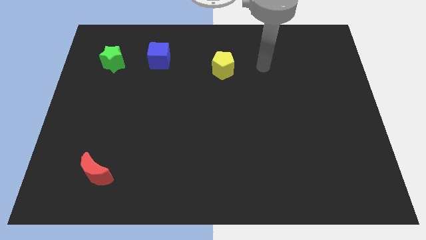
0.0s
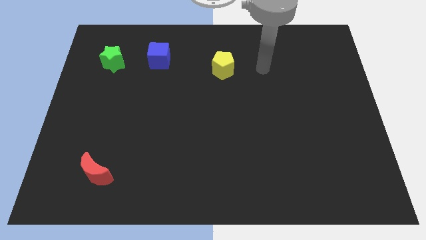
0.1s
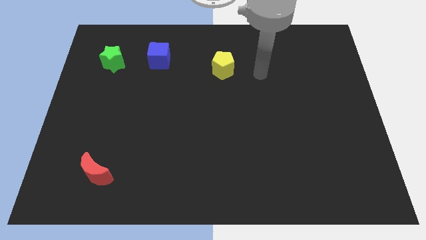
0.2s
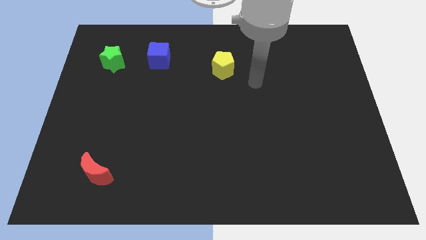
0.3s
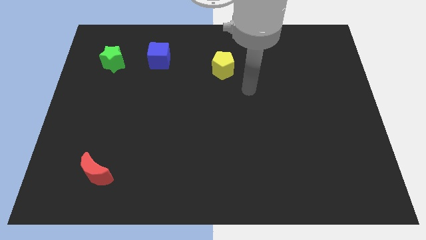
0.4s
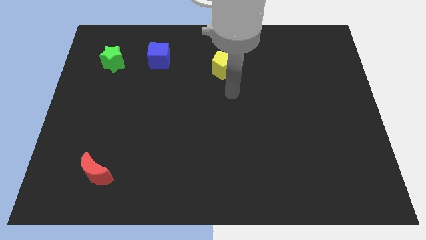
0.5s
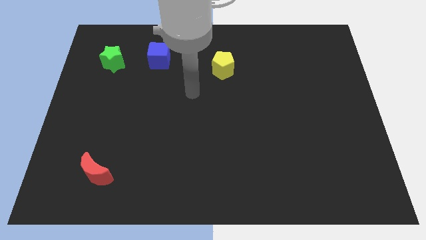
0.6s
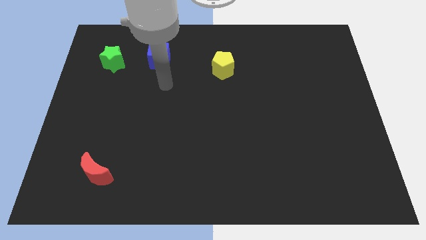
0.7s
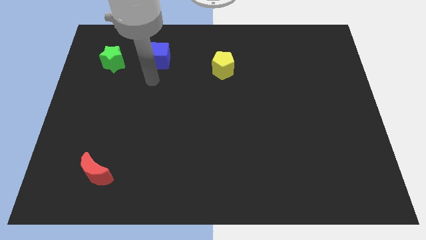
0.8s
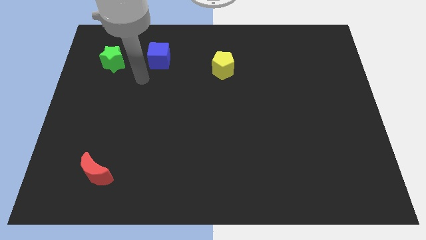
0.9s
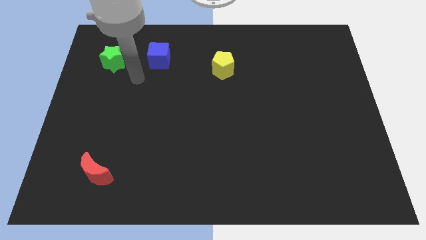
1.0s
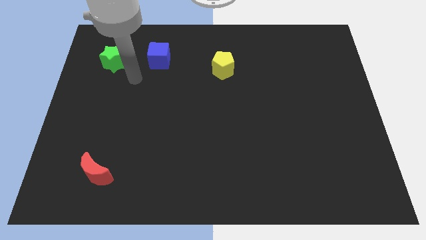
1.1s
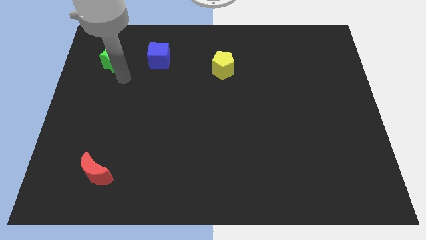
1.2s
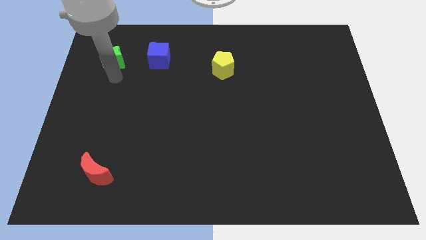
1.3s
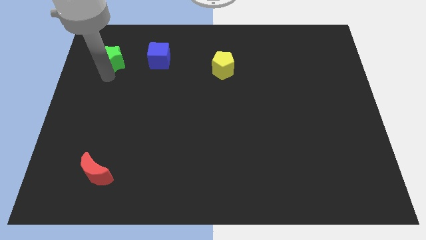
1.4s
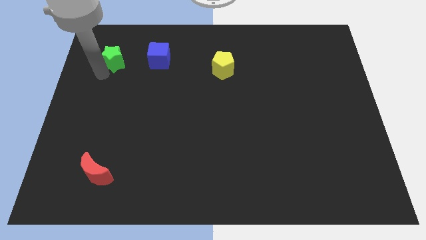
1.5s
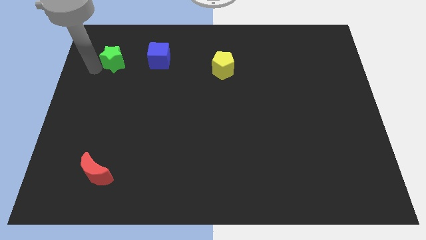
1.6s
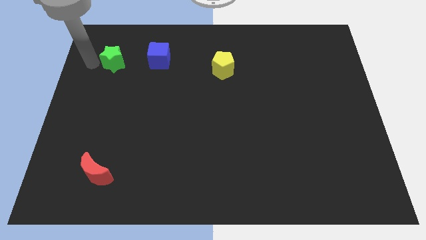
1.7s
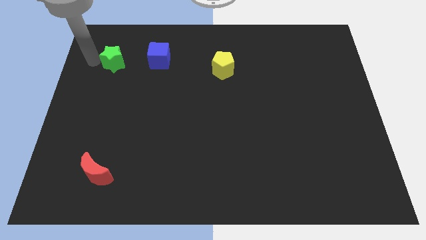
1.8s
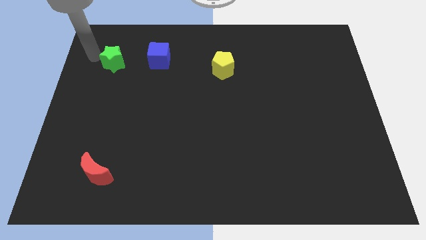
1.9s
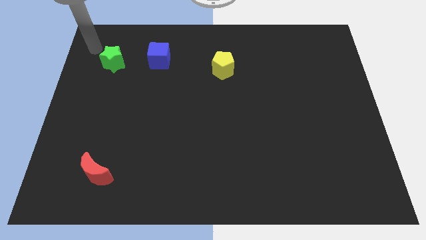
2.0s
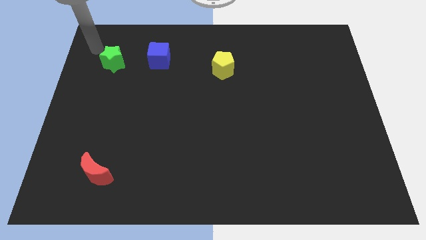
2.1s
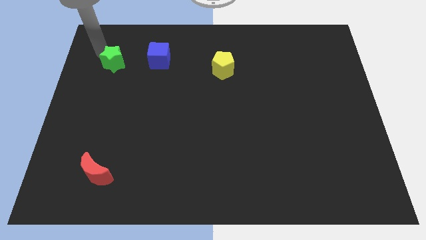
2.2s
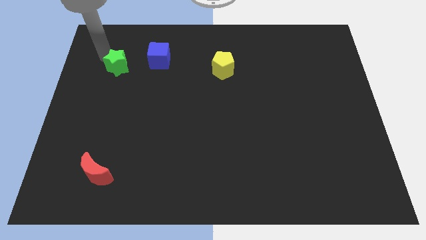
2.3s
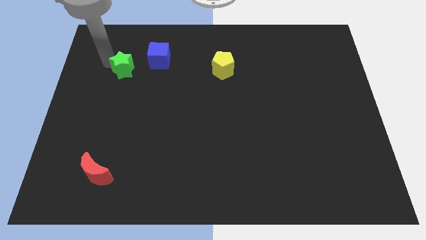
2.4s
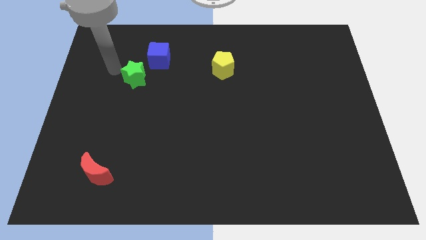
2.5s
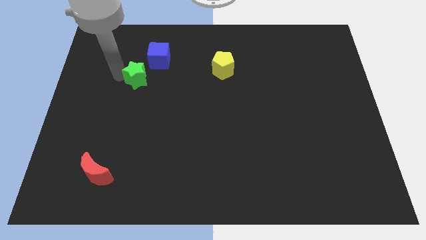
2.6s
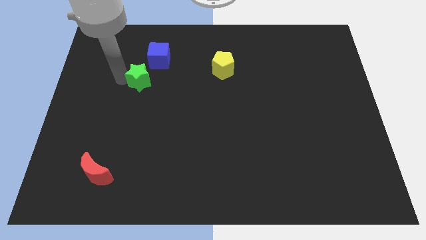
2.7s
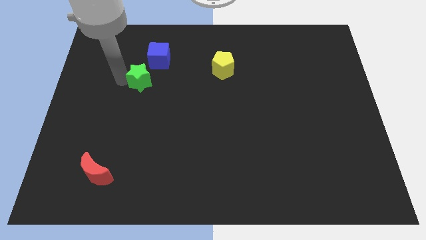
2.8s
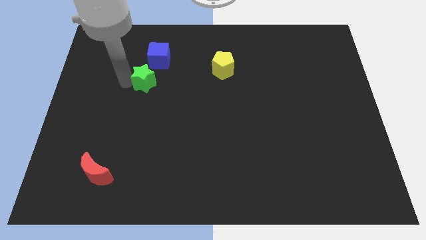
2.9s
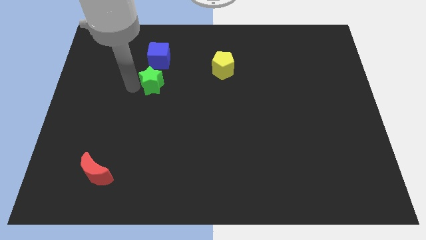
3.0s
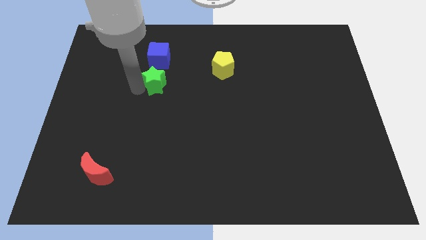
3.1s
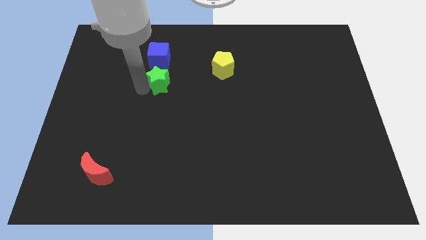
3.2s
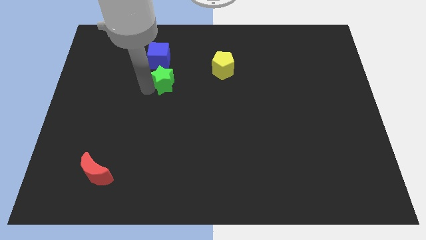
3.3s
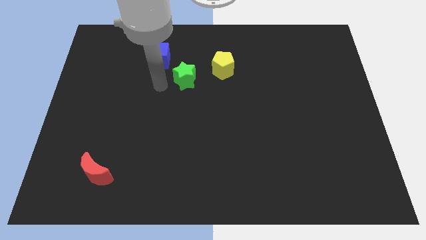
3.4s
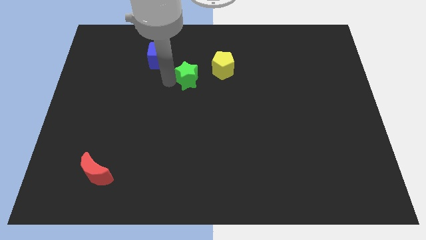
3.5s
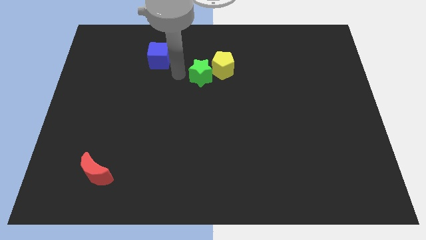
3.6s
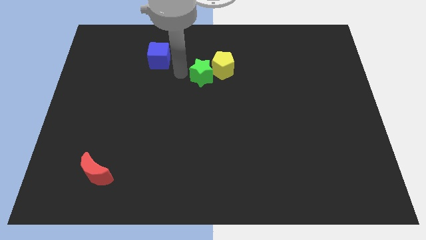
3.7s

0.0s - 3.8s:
move the green star towards the pentagon

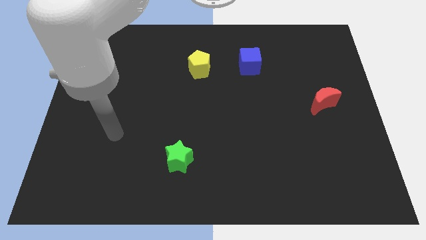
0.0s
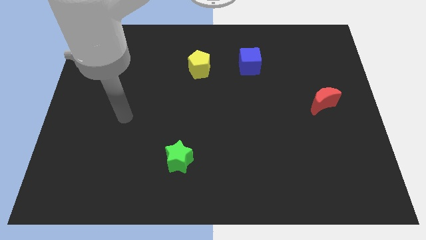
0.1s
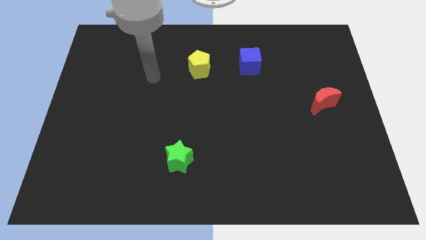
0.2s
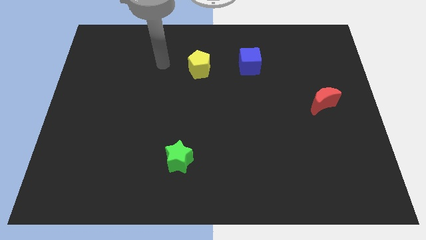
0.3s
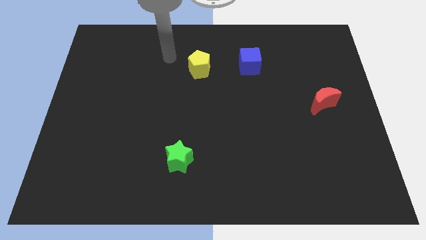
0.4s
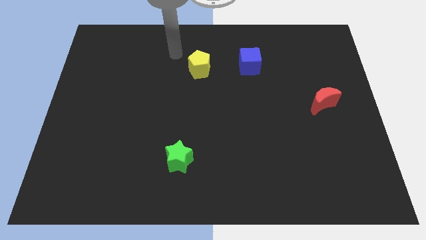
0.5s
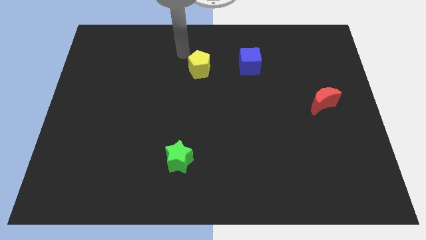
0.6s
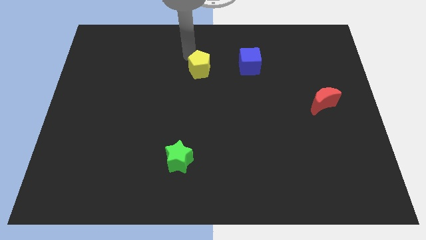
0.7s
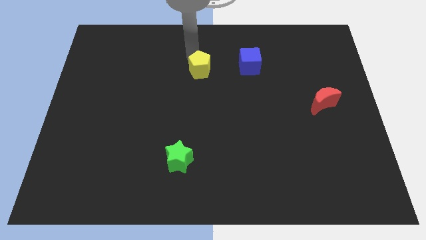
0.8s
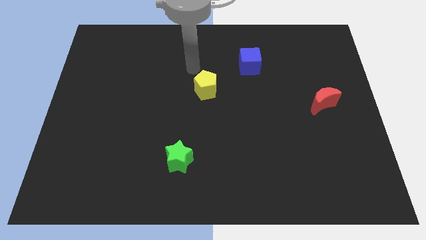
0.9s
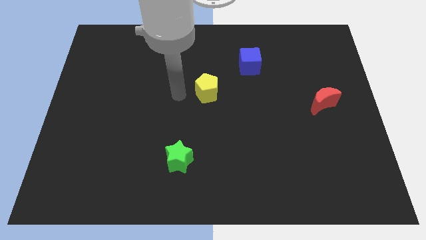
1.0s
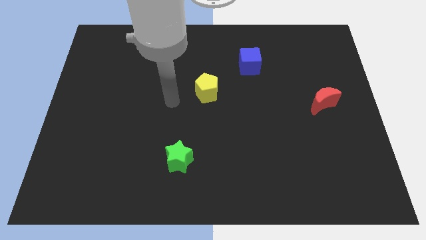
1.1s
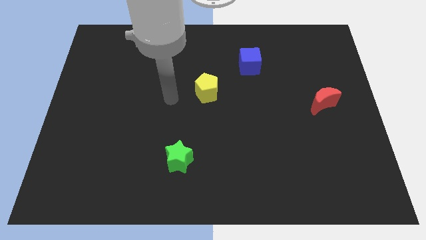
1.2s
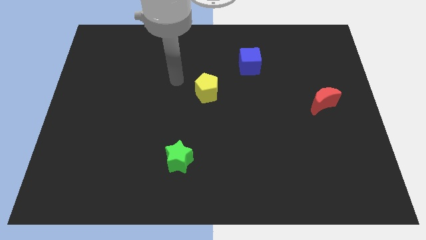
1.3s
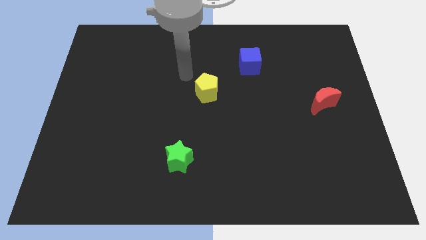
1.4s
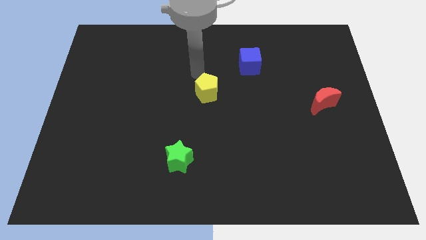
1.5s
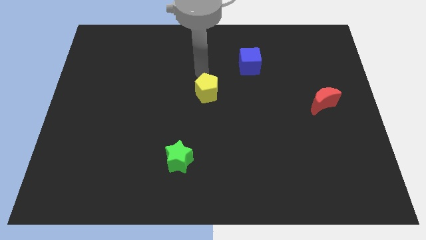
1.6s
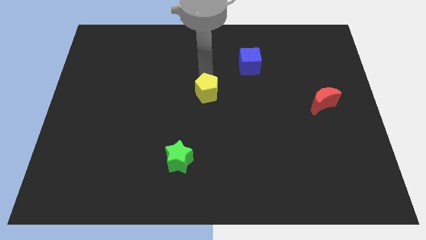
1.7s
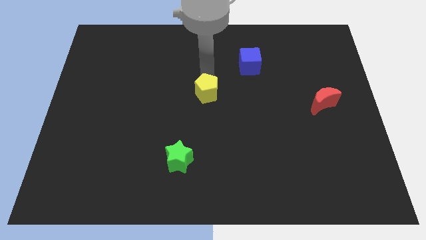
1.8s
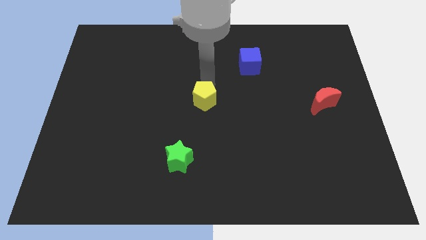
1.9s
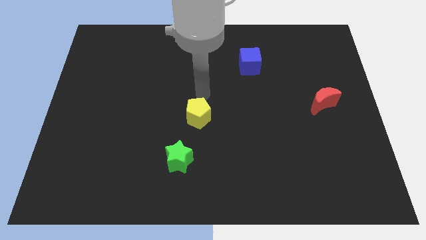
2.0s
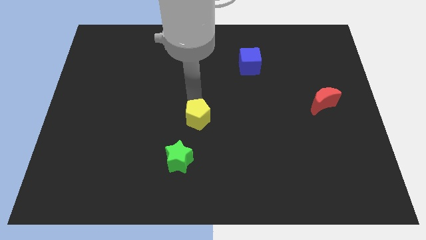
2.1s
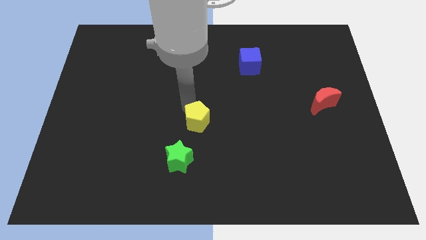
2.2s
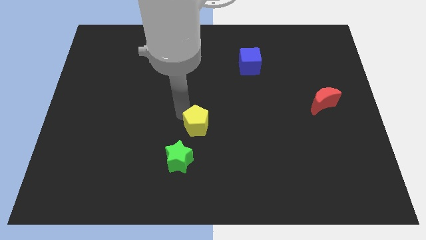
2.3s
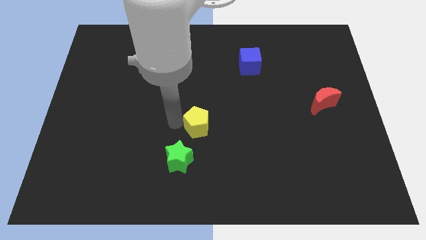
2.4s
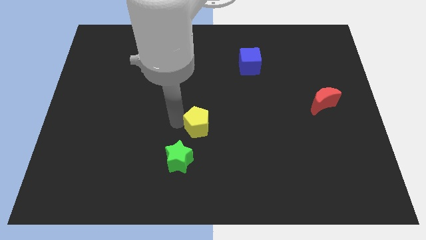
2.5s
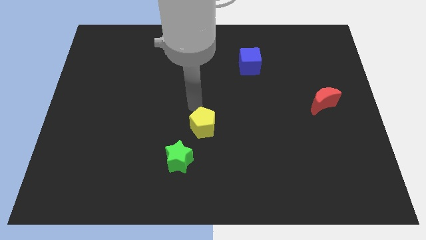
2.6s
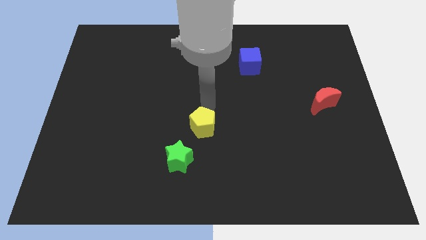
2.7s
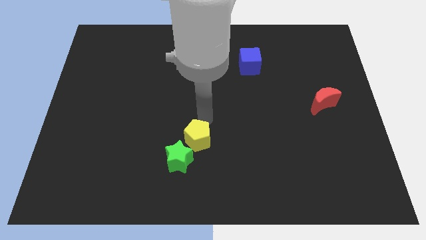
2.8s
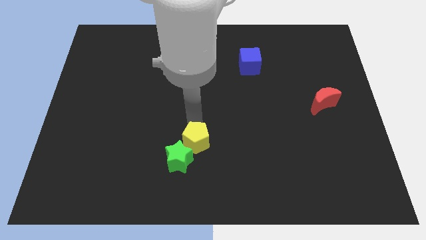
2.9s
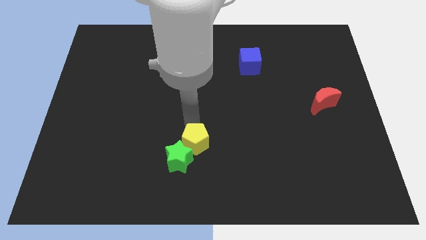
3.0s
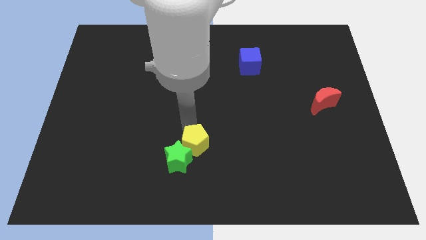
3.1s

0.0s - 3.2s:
put the pentagon close to the green block

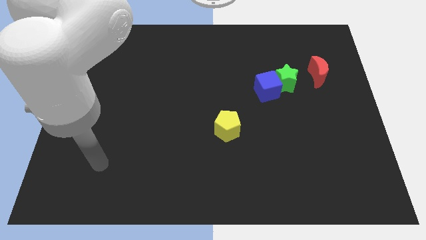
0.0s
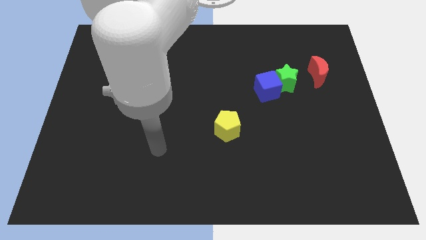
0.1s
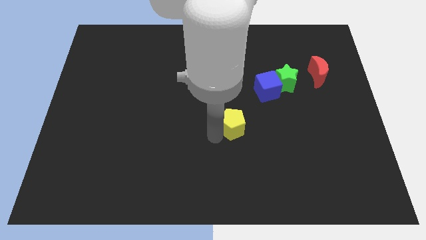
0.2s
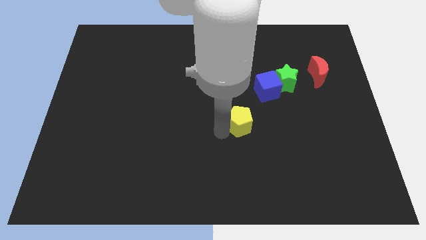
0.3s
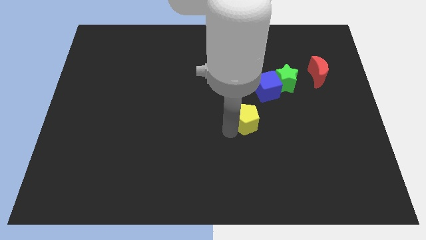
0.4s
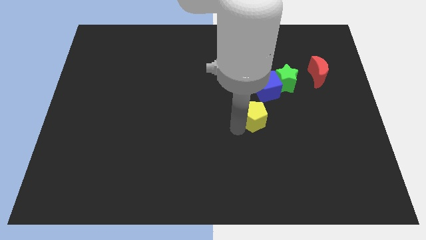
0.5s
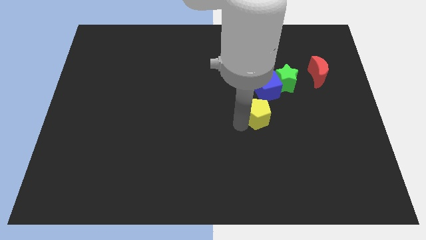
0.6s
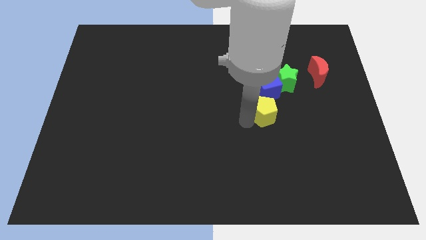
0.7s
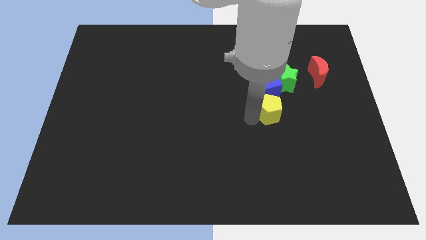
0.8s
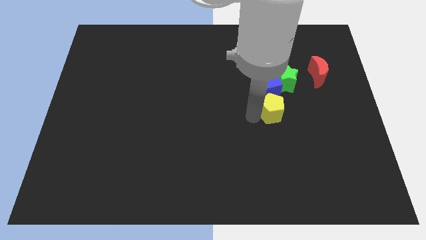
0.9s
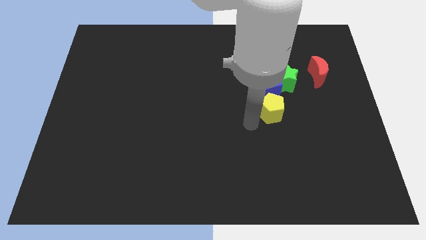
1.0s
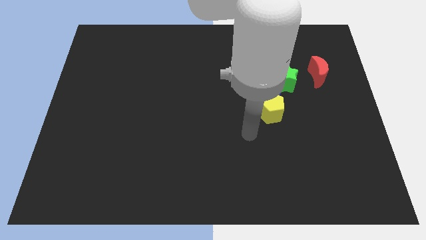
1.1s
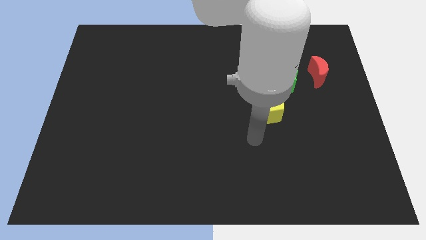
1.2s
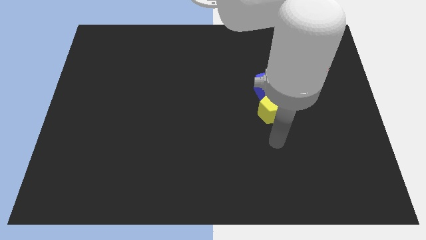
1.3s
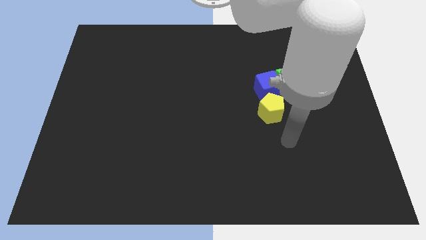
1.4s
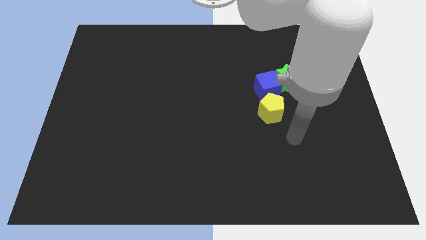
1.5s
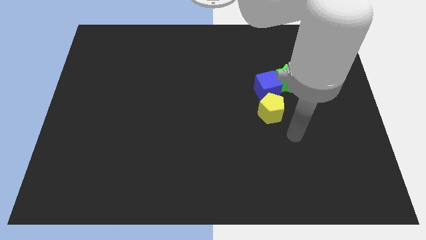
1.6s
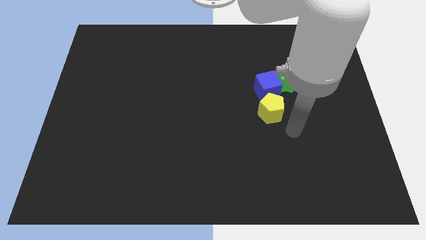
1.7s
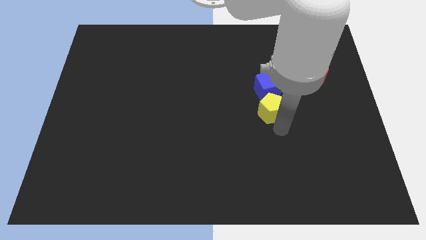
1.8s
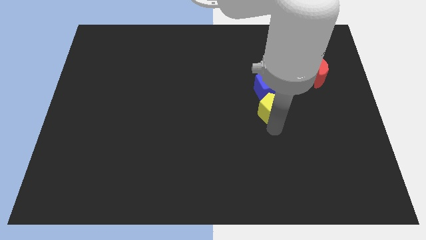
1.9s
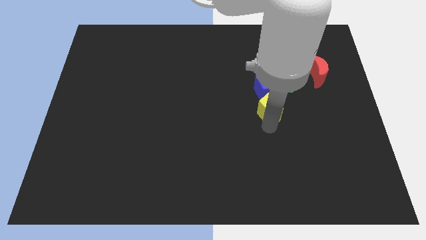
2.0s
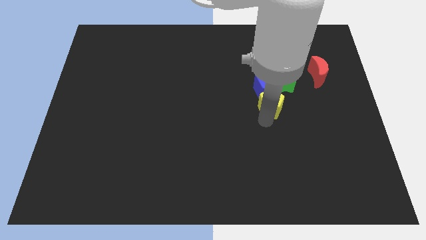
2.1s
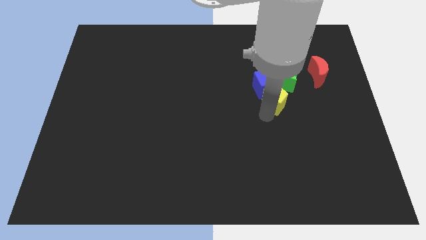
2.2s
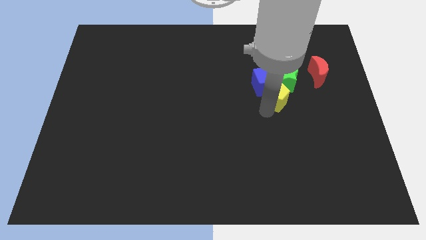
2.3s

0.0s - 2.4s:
put the yellow pentagon to the blue block
